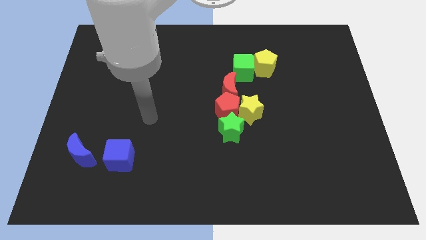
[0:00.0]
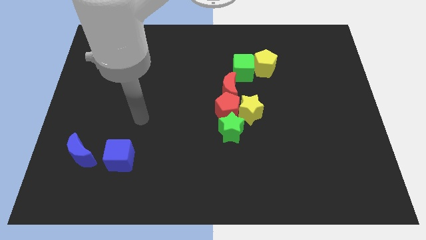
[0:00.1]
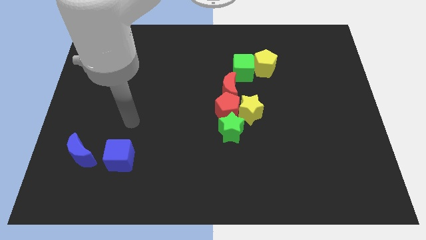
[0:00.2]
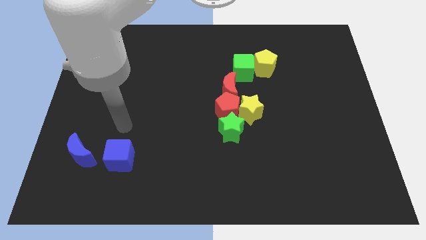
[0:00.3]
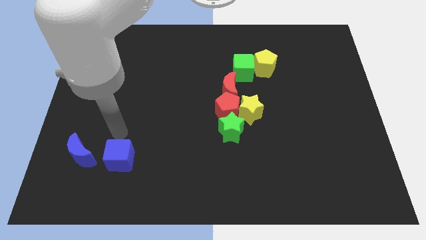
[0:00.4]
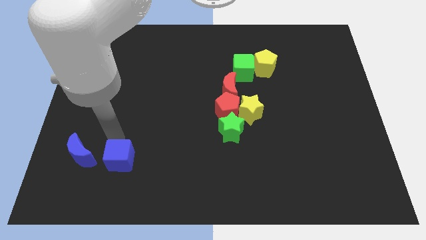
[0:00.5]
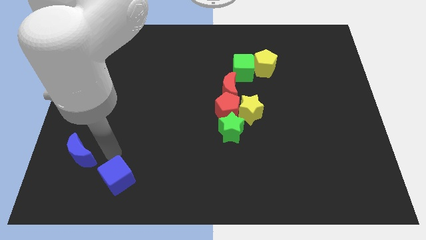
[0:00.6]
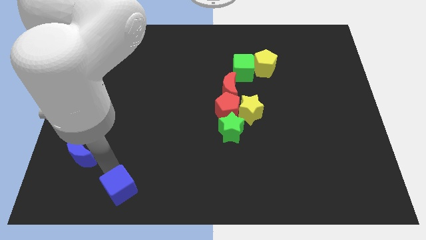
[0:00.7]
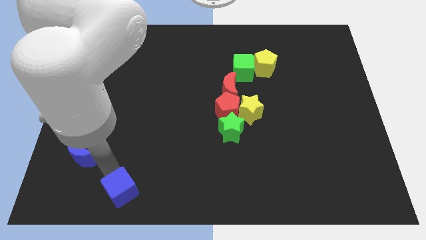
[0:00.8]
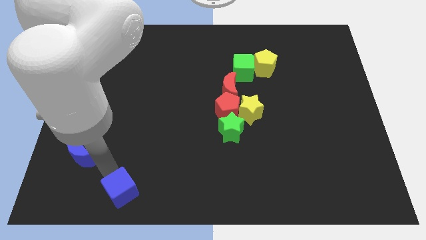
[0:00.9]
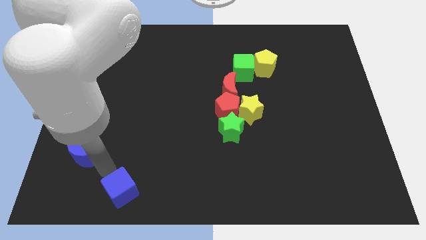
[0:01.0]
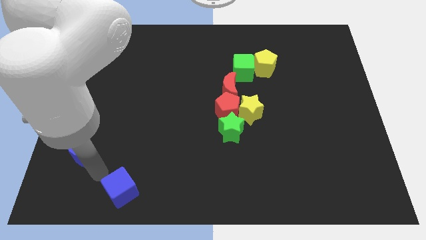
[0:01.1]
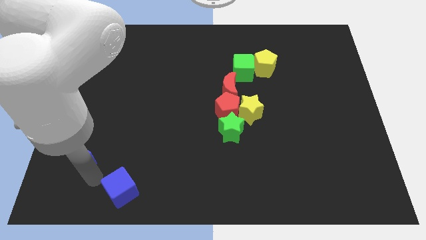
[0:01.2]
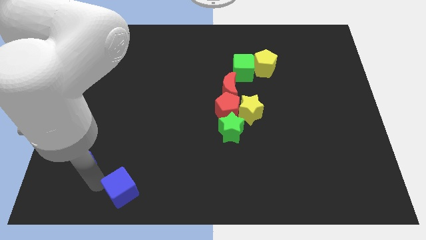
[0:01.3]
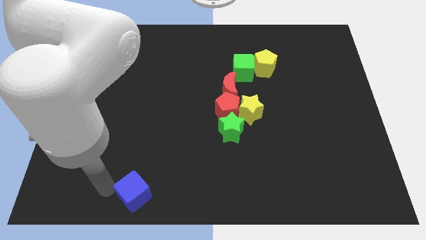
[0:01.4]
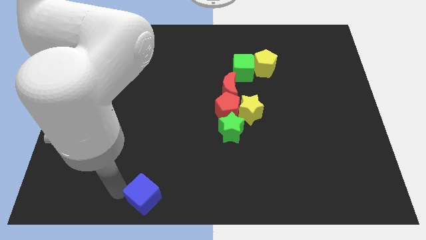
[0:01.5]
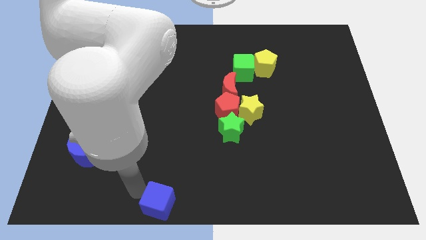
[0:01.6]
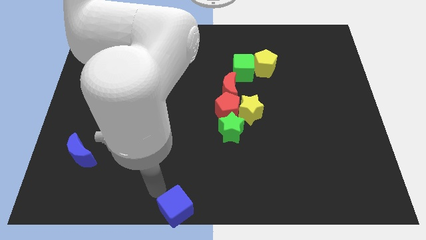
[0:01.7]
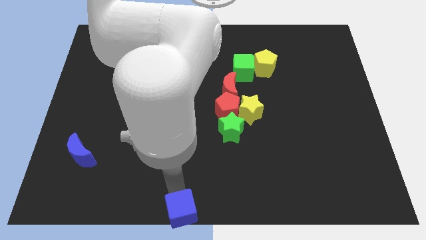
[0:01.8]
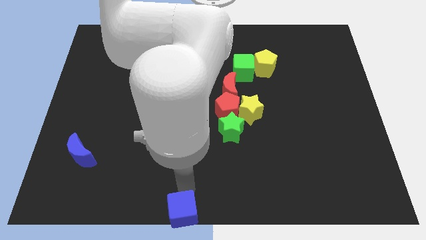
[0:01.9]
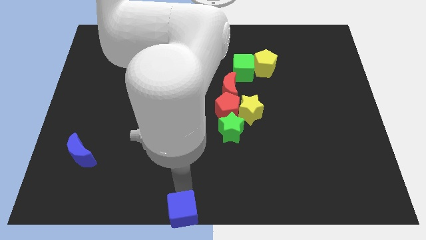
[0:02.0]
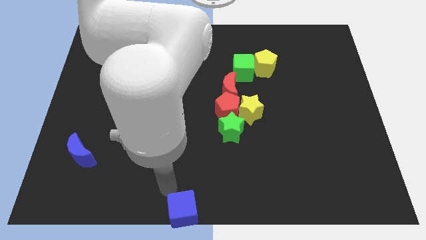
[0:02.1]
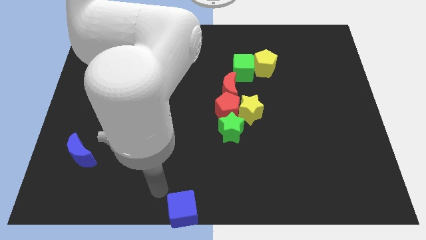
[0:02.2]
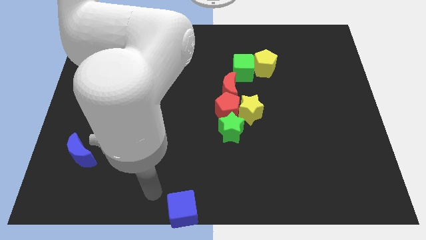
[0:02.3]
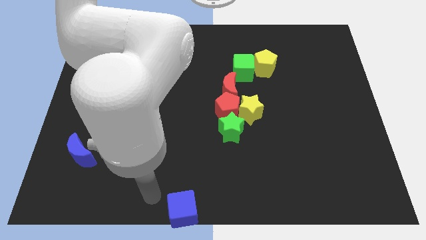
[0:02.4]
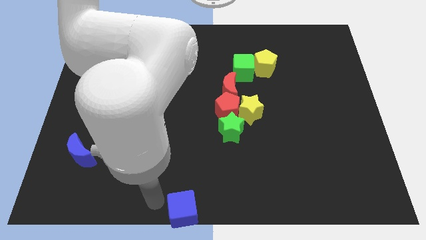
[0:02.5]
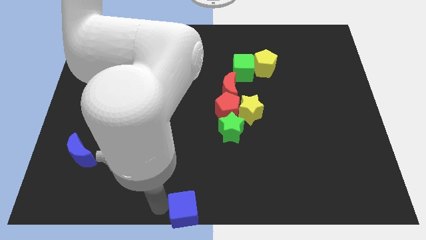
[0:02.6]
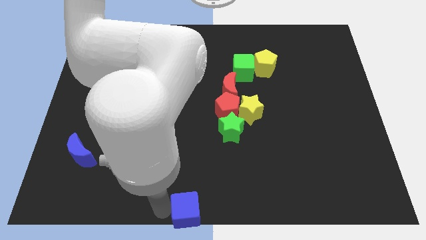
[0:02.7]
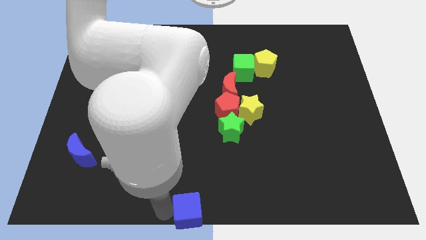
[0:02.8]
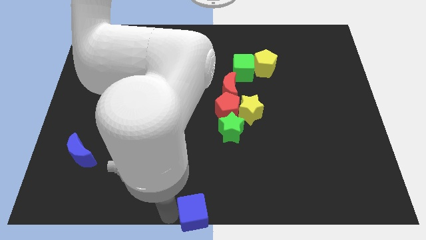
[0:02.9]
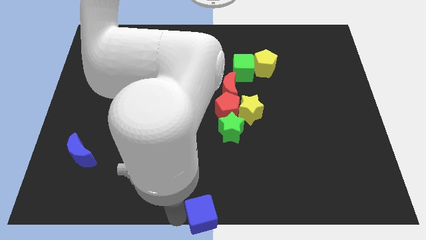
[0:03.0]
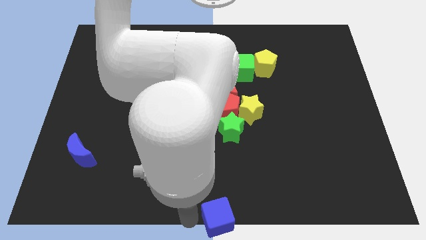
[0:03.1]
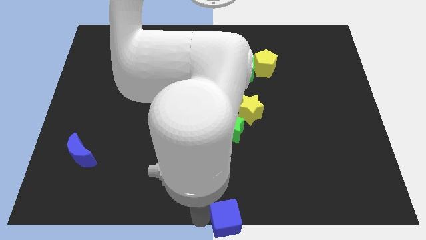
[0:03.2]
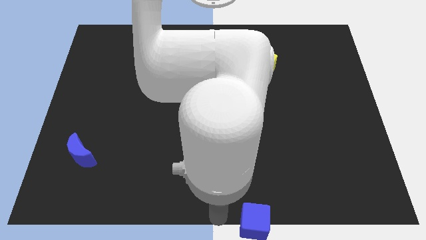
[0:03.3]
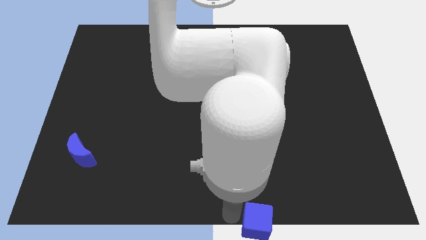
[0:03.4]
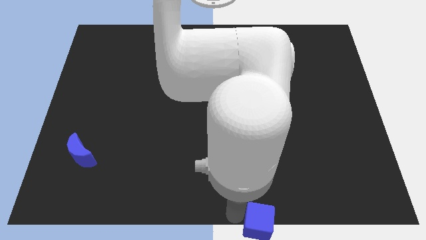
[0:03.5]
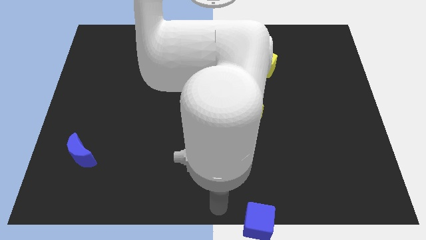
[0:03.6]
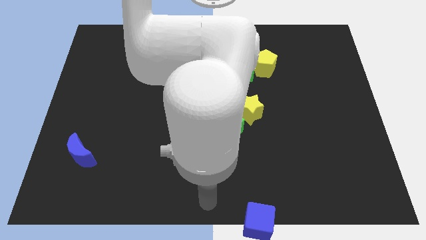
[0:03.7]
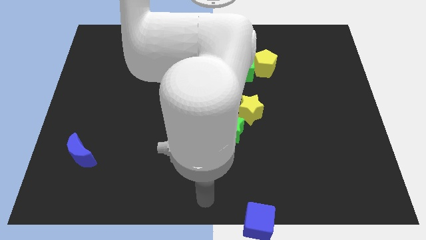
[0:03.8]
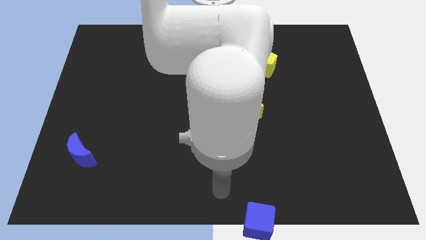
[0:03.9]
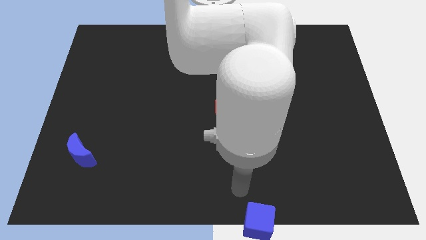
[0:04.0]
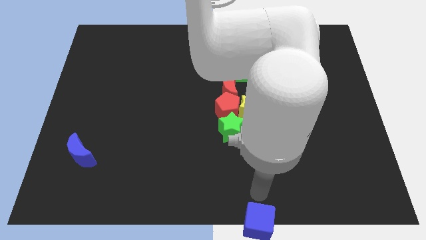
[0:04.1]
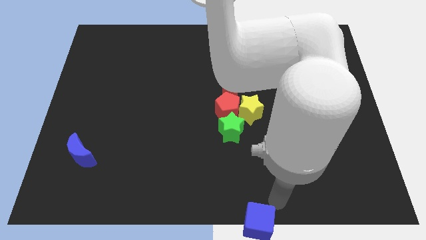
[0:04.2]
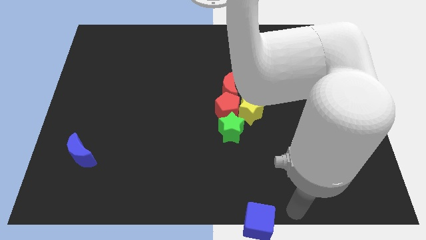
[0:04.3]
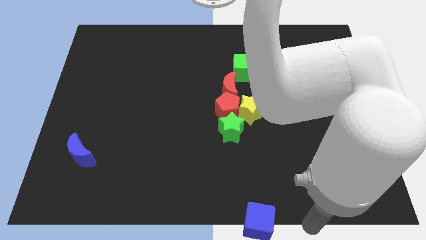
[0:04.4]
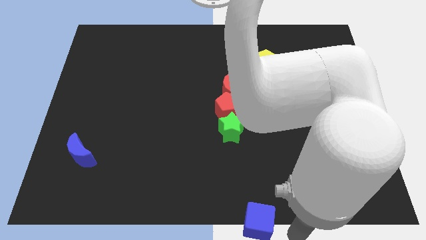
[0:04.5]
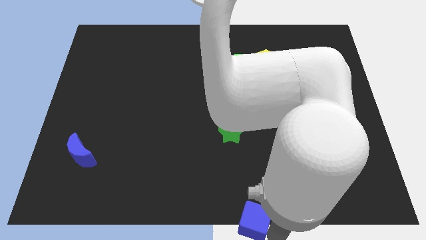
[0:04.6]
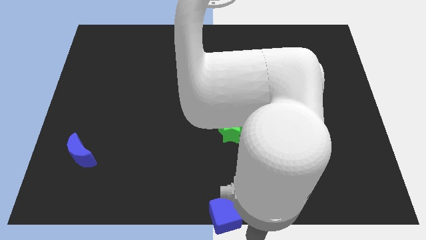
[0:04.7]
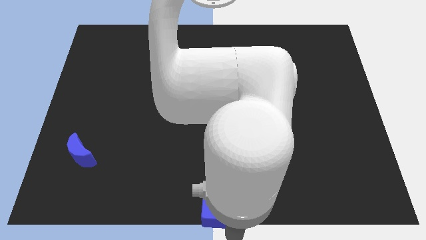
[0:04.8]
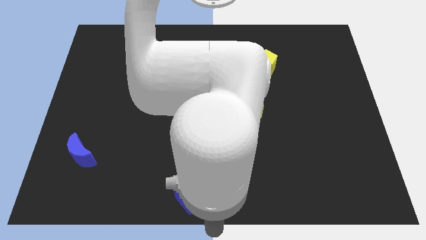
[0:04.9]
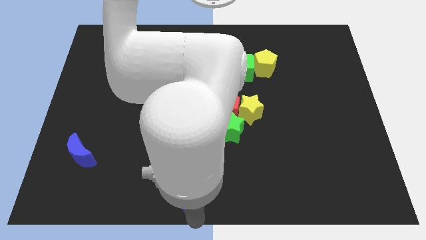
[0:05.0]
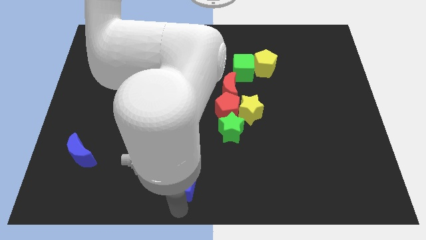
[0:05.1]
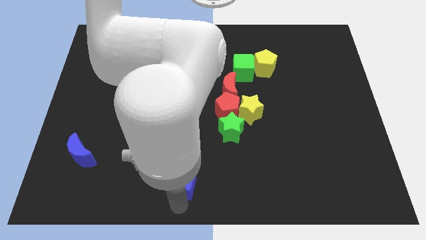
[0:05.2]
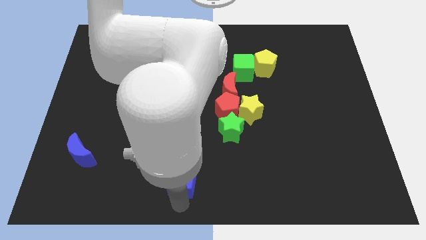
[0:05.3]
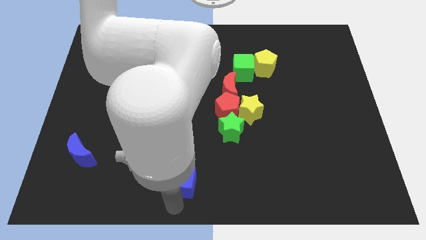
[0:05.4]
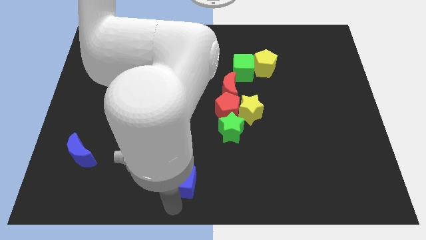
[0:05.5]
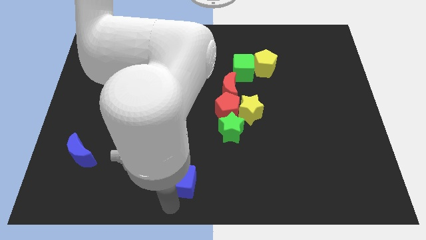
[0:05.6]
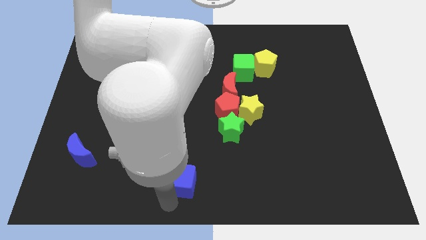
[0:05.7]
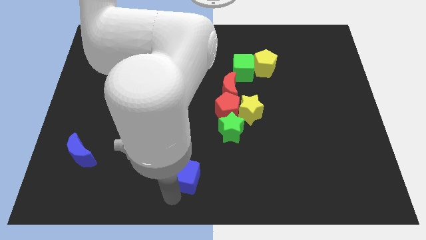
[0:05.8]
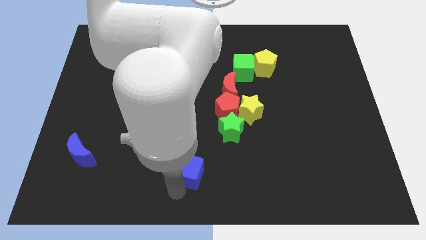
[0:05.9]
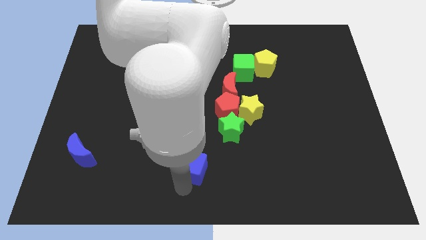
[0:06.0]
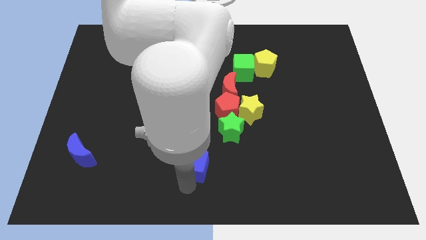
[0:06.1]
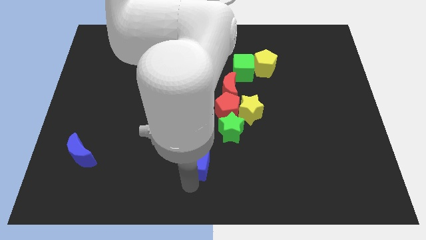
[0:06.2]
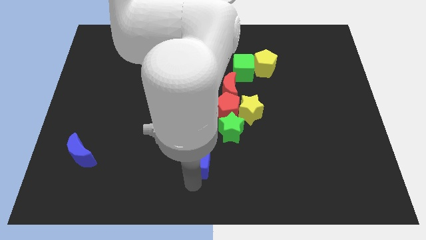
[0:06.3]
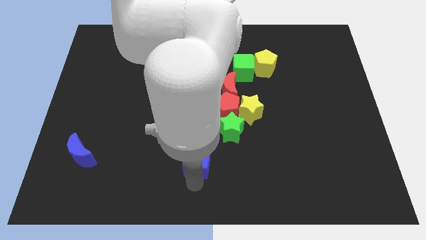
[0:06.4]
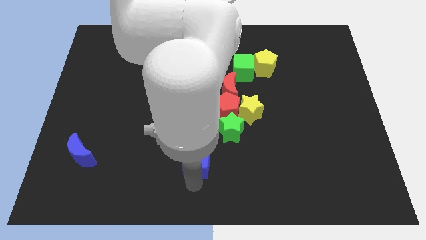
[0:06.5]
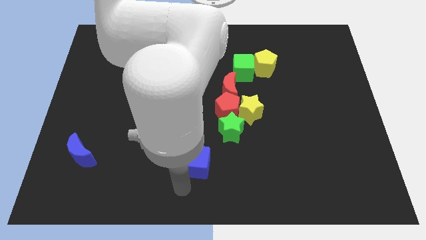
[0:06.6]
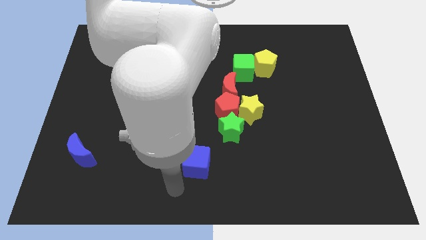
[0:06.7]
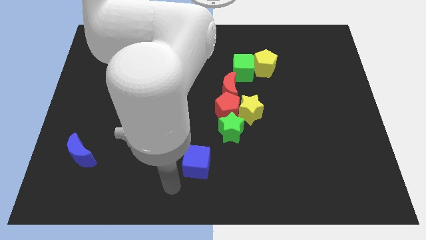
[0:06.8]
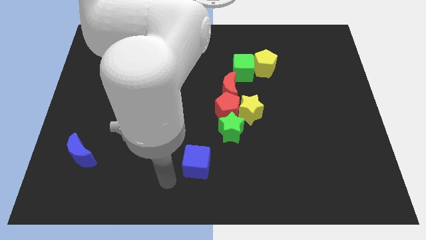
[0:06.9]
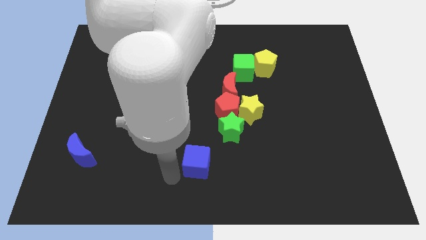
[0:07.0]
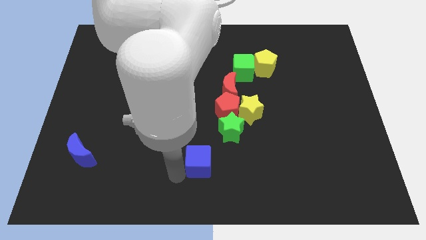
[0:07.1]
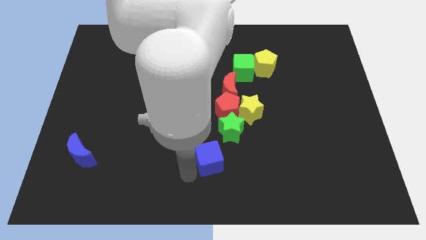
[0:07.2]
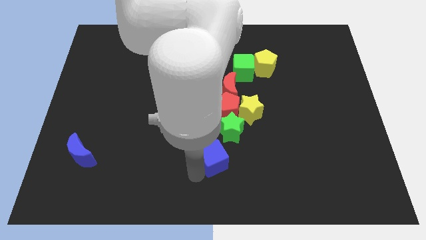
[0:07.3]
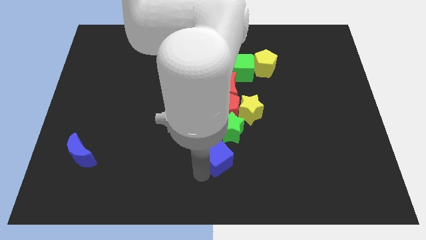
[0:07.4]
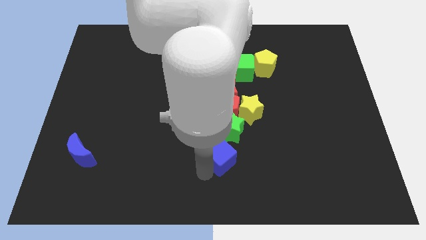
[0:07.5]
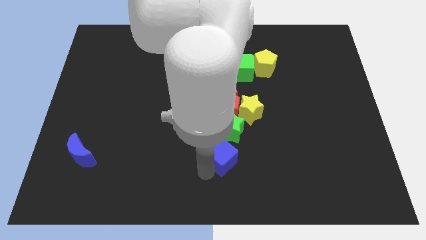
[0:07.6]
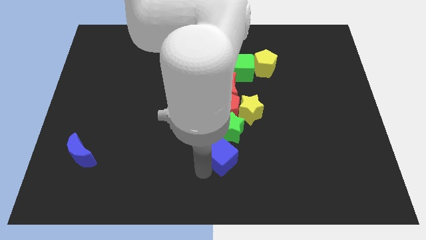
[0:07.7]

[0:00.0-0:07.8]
push the blue cube towards green star

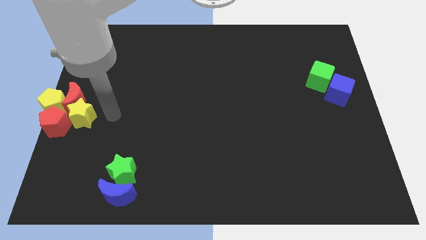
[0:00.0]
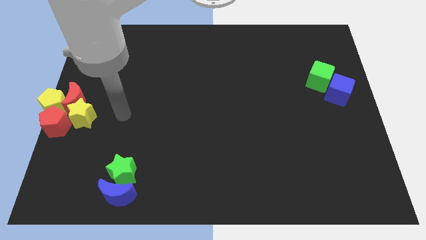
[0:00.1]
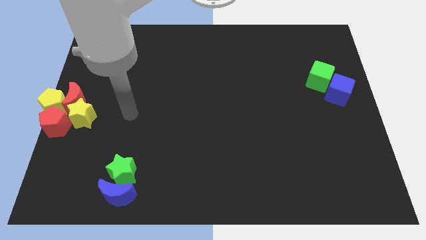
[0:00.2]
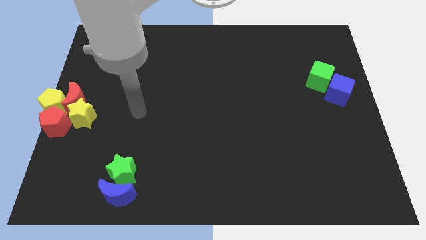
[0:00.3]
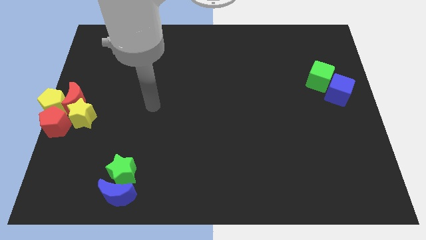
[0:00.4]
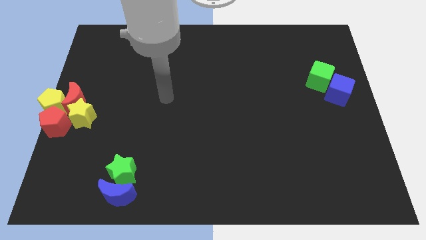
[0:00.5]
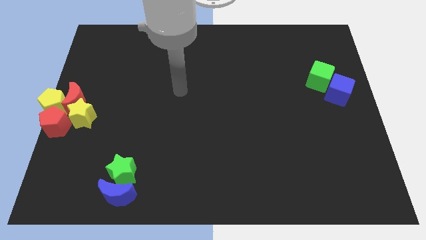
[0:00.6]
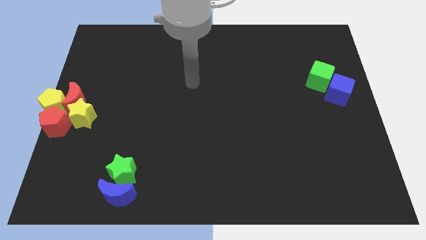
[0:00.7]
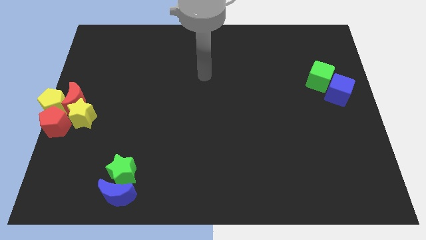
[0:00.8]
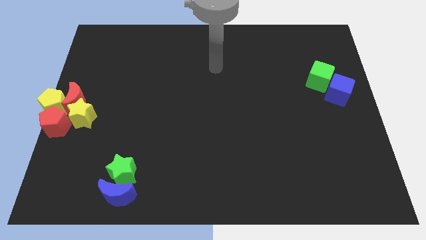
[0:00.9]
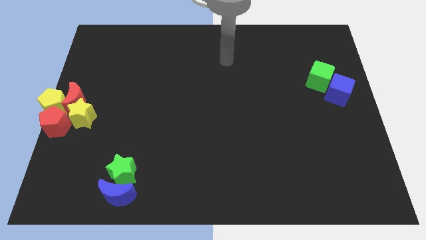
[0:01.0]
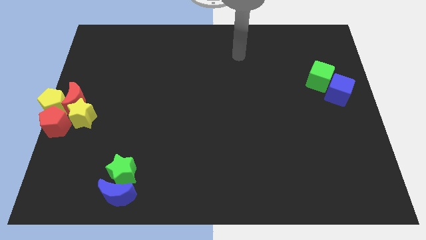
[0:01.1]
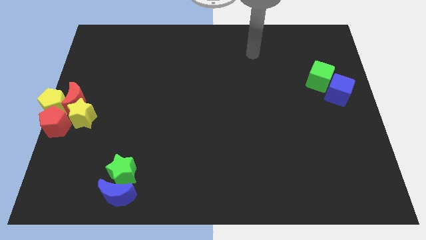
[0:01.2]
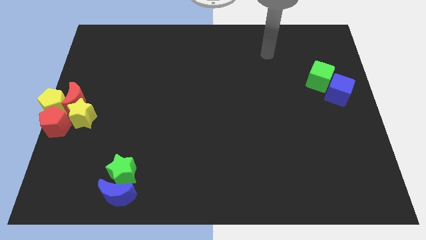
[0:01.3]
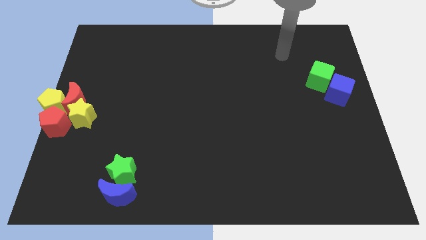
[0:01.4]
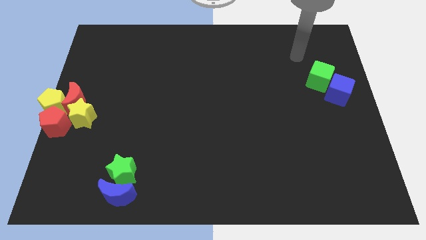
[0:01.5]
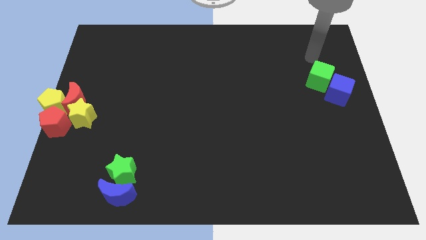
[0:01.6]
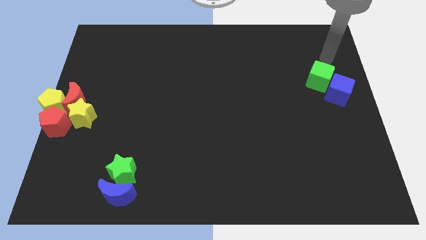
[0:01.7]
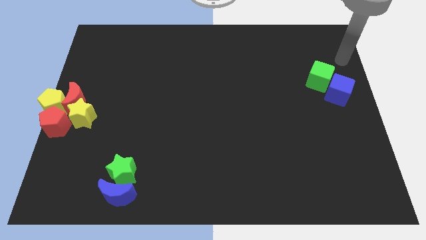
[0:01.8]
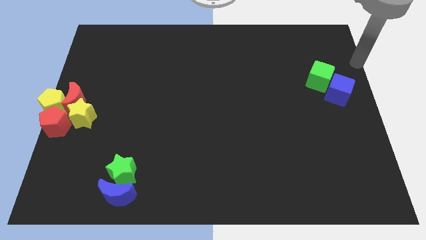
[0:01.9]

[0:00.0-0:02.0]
place the arm over the blue cube
